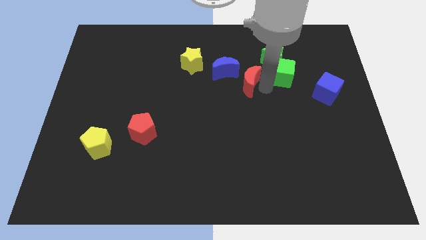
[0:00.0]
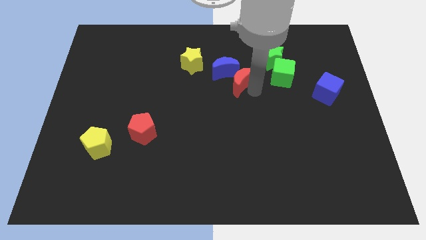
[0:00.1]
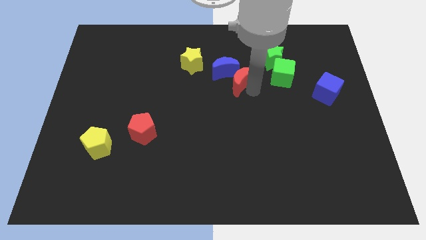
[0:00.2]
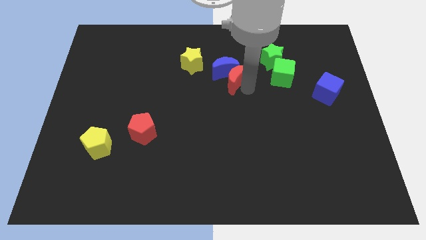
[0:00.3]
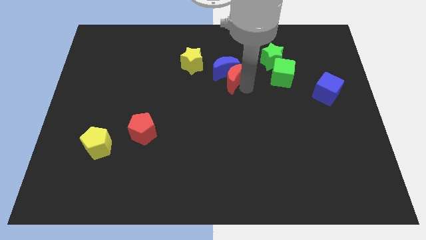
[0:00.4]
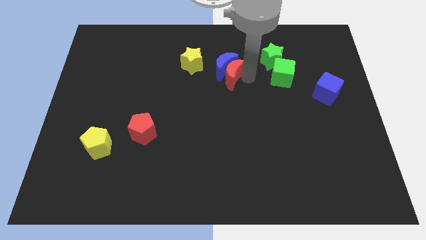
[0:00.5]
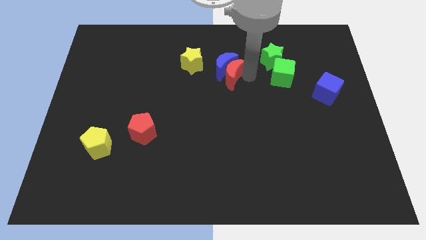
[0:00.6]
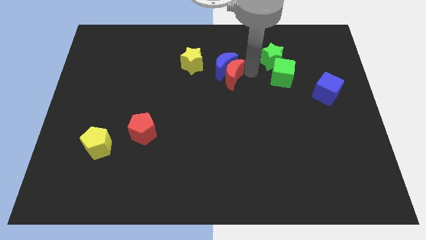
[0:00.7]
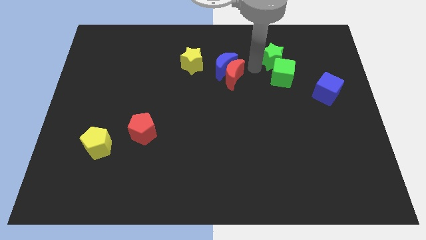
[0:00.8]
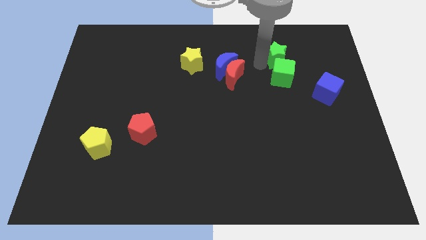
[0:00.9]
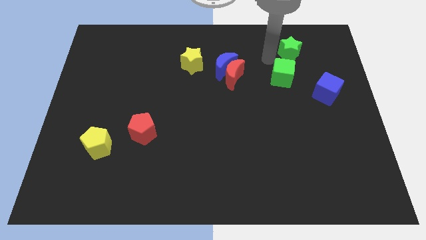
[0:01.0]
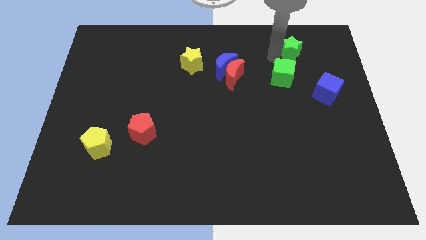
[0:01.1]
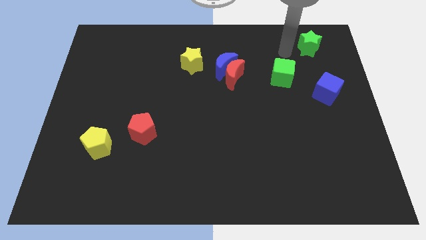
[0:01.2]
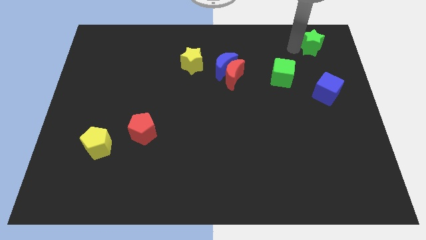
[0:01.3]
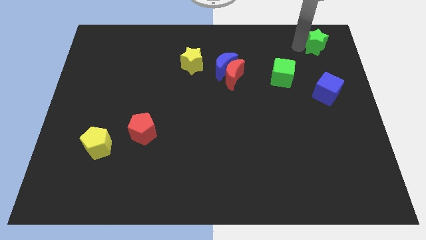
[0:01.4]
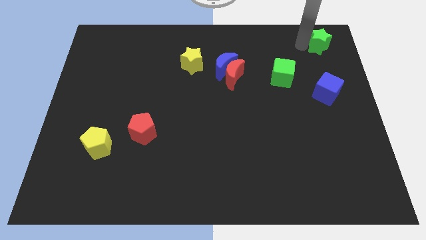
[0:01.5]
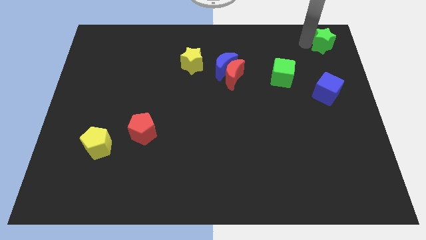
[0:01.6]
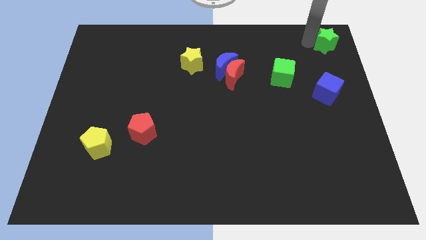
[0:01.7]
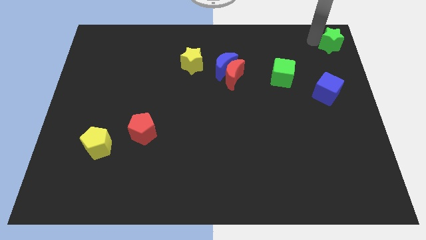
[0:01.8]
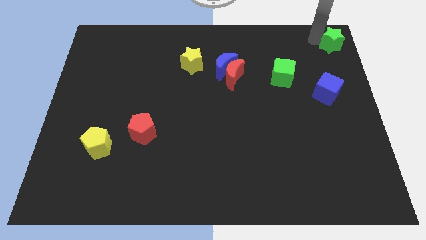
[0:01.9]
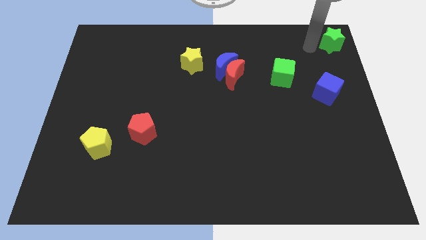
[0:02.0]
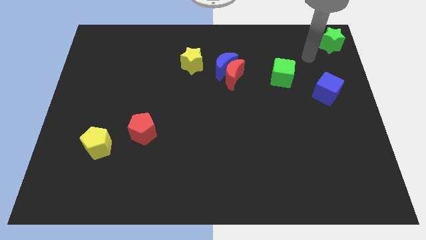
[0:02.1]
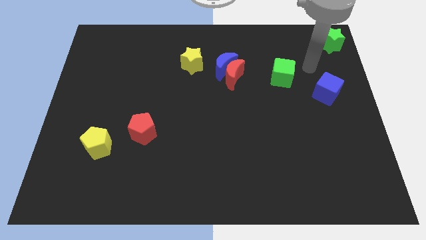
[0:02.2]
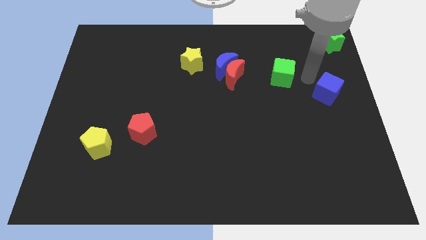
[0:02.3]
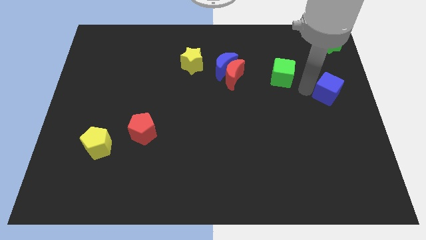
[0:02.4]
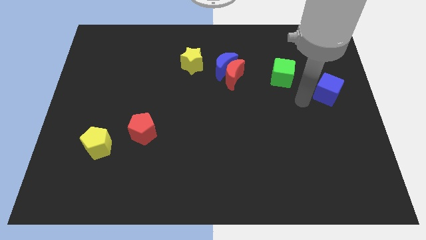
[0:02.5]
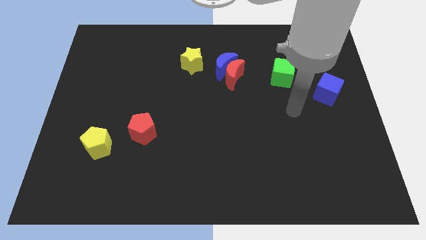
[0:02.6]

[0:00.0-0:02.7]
place the green star at top right corner of the board

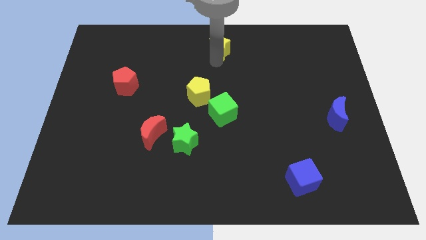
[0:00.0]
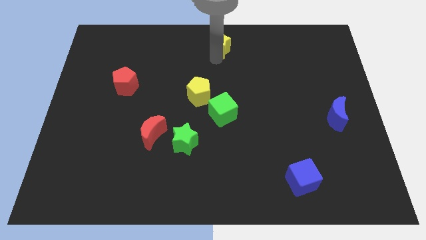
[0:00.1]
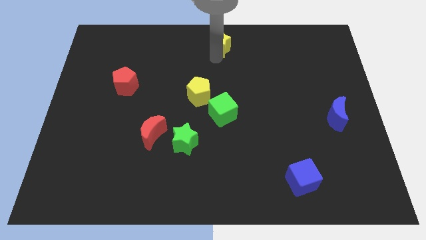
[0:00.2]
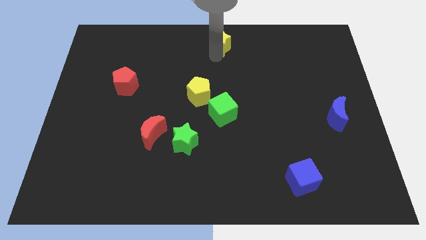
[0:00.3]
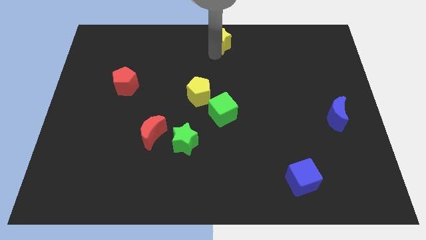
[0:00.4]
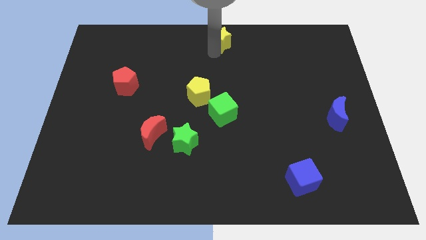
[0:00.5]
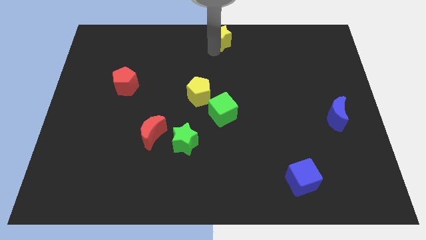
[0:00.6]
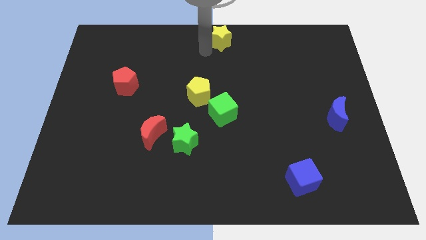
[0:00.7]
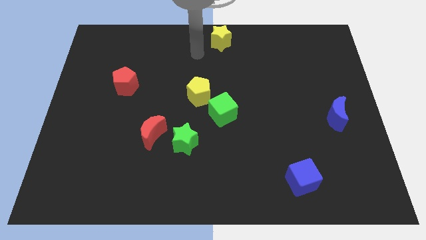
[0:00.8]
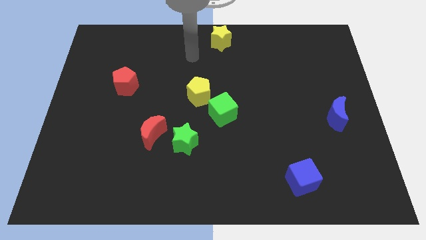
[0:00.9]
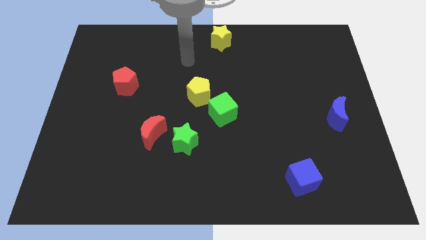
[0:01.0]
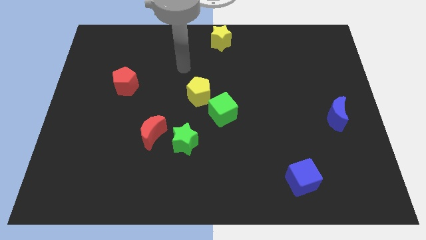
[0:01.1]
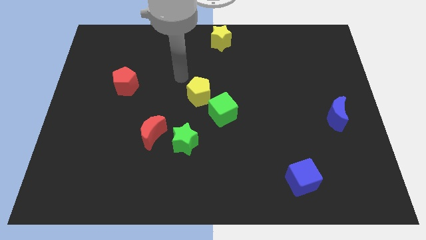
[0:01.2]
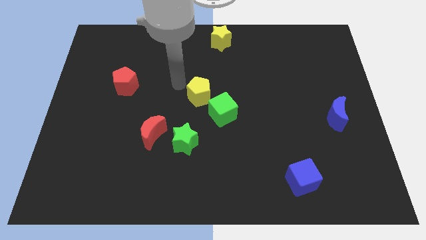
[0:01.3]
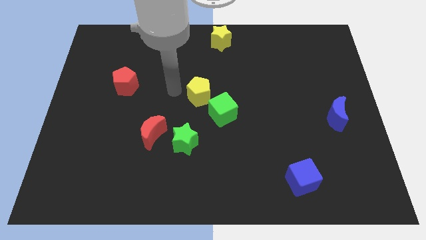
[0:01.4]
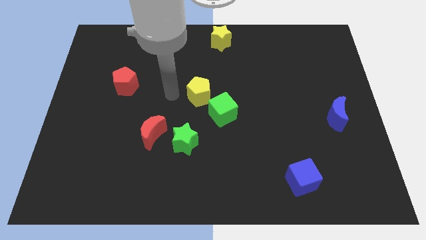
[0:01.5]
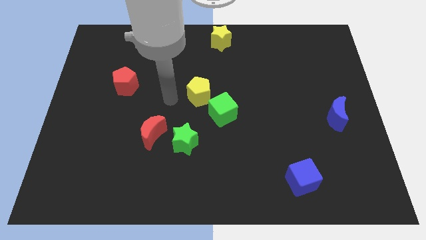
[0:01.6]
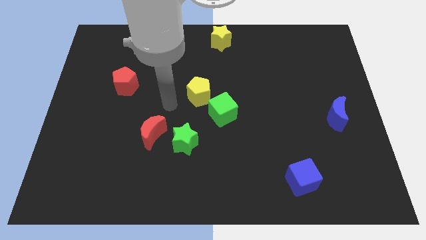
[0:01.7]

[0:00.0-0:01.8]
move the yellow star to the top center of the board

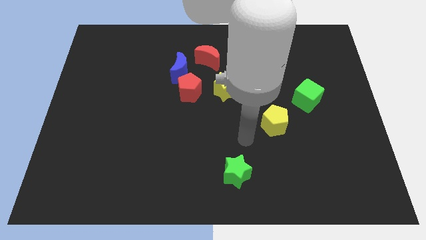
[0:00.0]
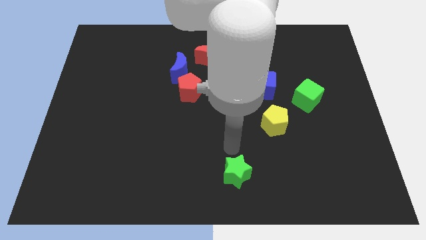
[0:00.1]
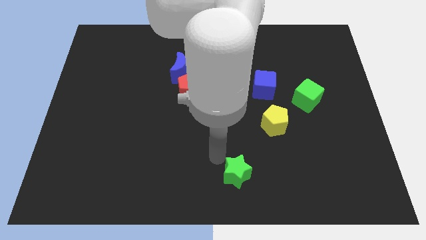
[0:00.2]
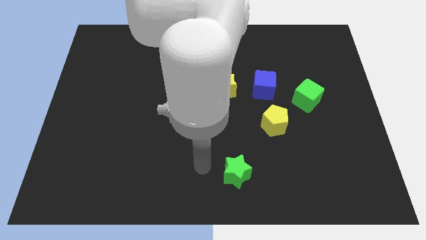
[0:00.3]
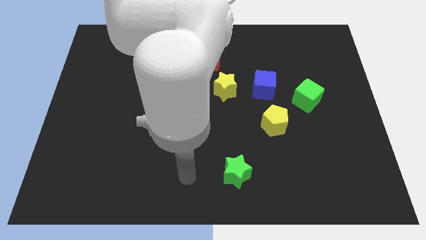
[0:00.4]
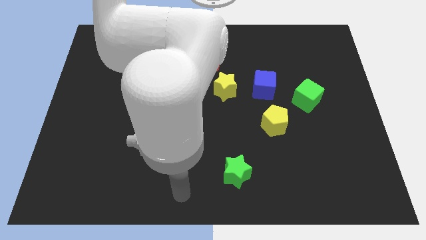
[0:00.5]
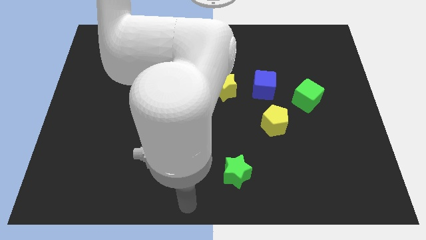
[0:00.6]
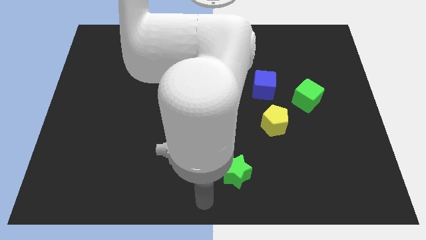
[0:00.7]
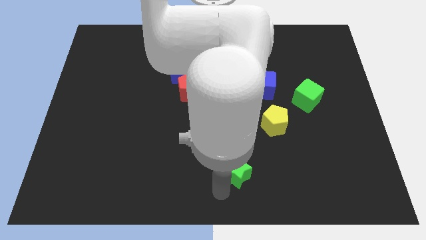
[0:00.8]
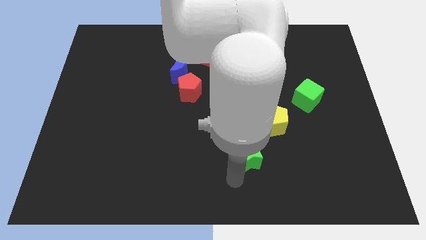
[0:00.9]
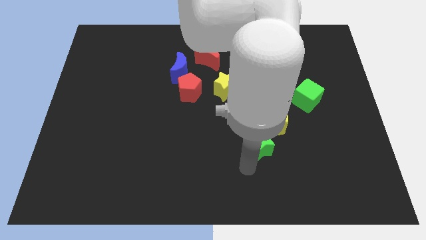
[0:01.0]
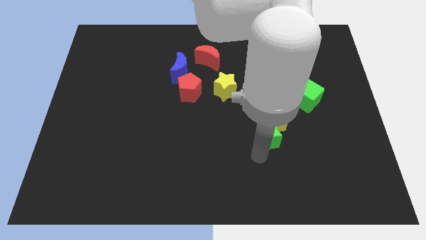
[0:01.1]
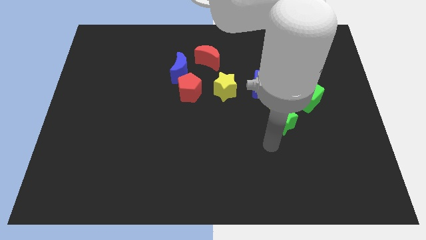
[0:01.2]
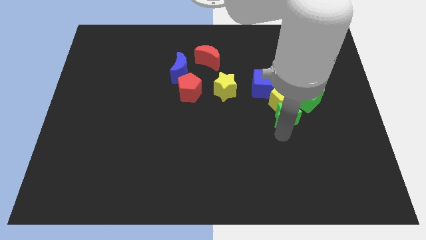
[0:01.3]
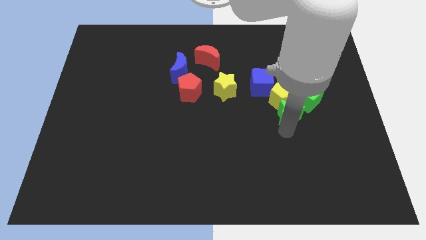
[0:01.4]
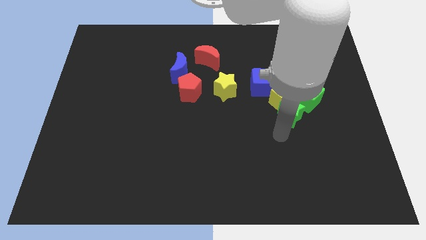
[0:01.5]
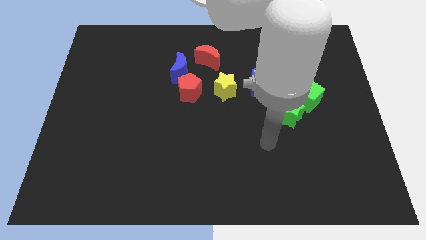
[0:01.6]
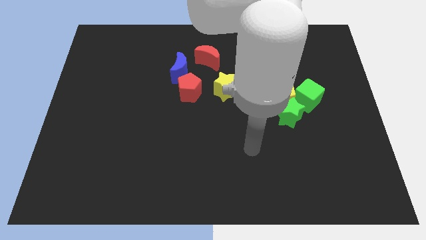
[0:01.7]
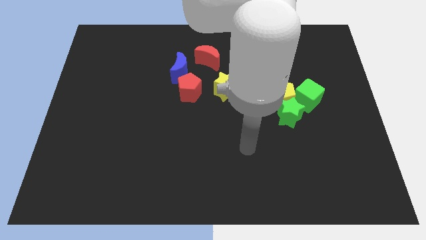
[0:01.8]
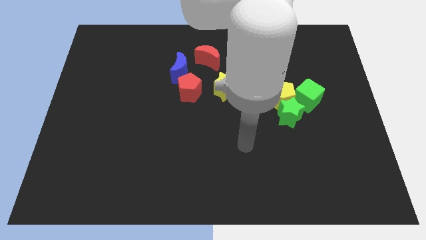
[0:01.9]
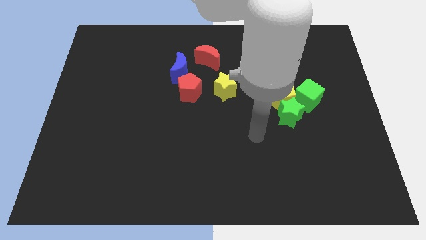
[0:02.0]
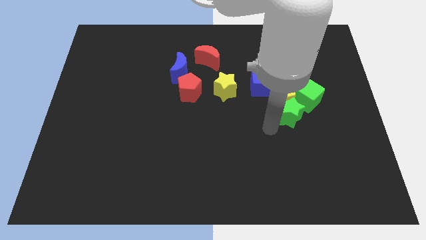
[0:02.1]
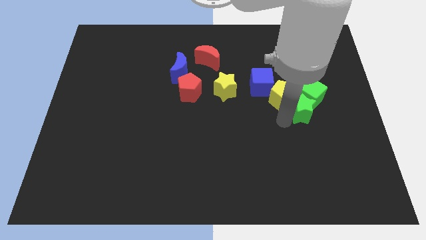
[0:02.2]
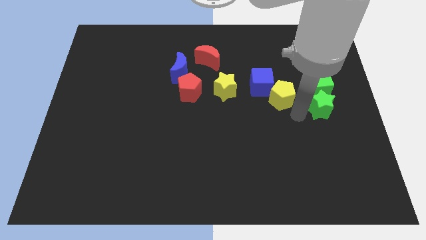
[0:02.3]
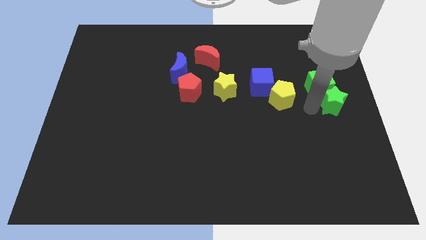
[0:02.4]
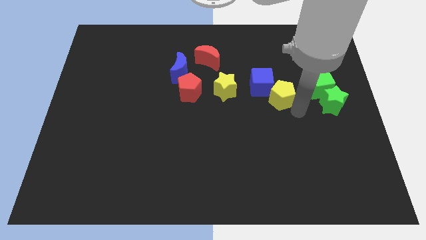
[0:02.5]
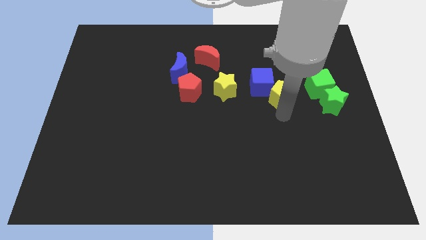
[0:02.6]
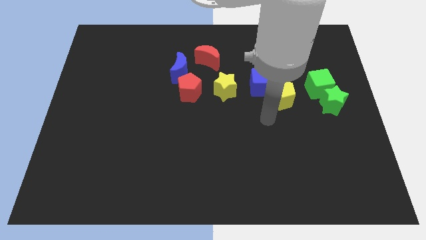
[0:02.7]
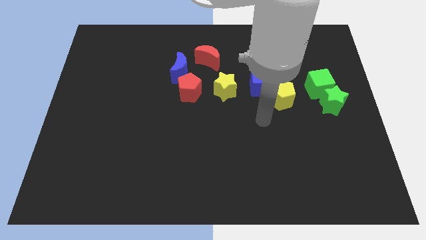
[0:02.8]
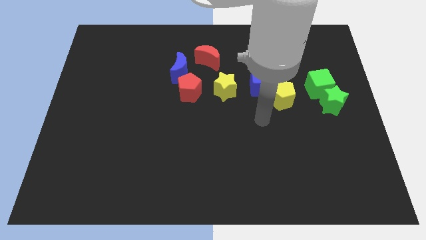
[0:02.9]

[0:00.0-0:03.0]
push the green star into the green cube

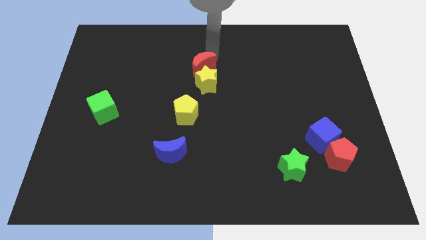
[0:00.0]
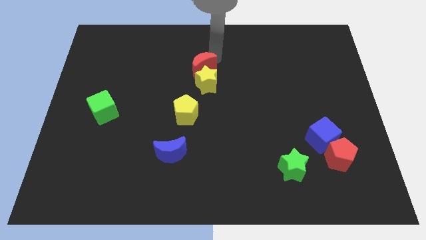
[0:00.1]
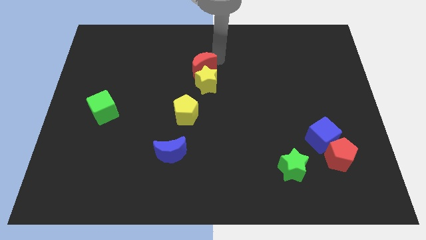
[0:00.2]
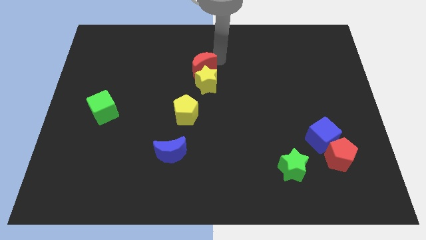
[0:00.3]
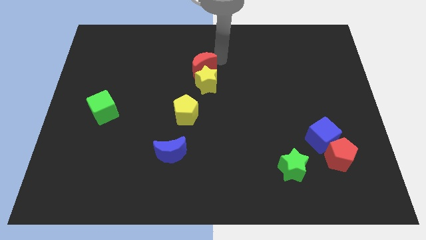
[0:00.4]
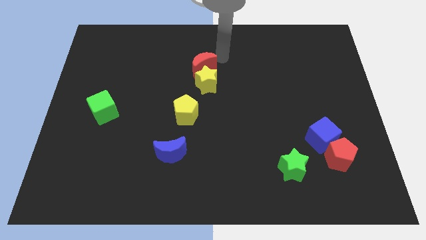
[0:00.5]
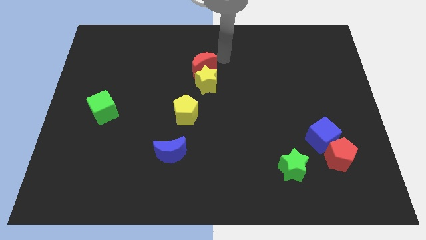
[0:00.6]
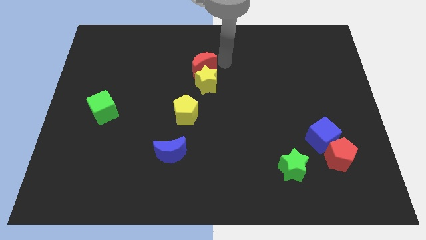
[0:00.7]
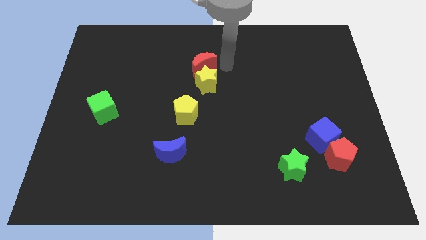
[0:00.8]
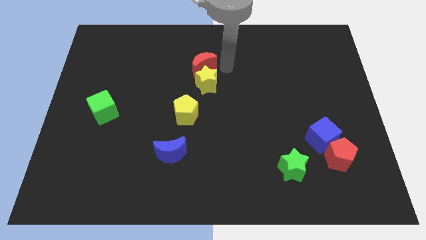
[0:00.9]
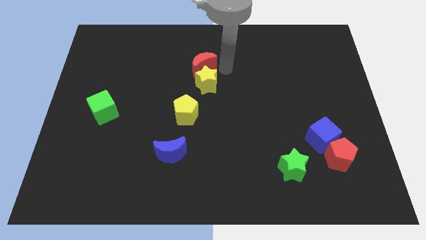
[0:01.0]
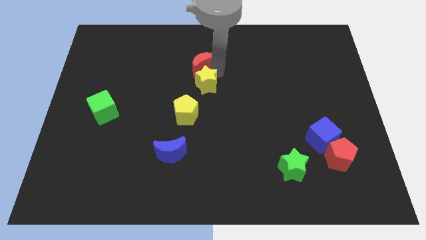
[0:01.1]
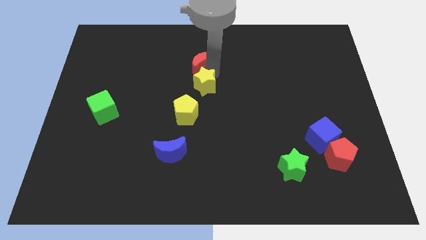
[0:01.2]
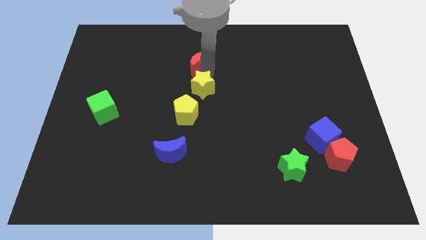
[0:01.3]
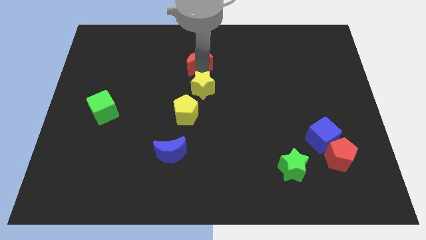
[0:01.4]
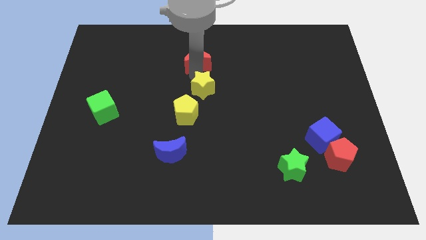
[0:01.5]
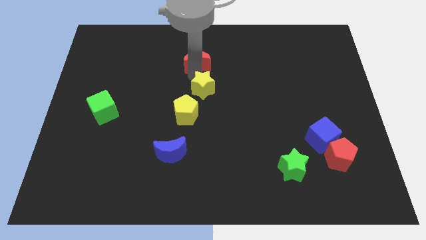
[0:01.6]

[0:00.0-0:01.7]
push the yellow star slightly away from the red crescent
